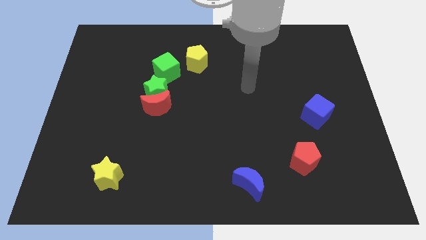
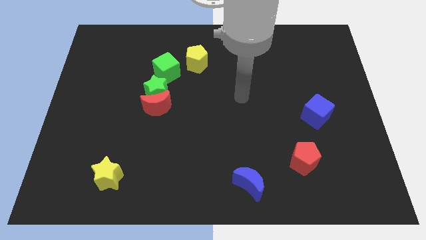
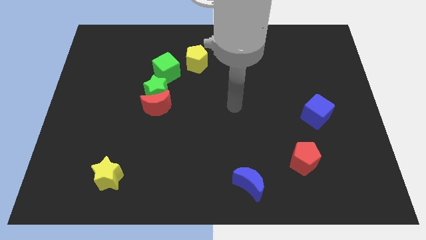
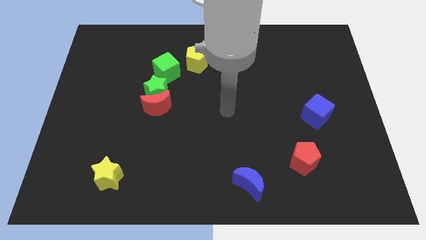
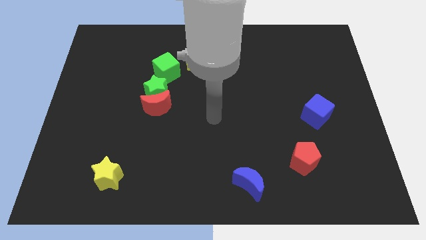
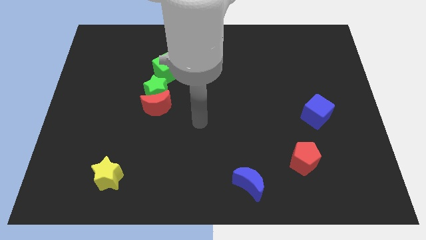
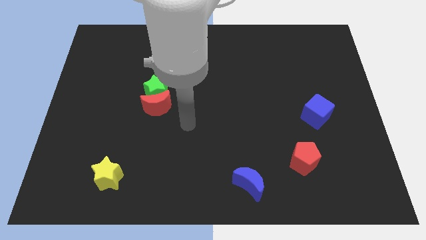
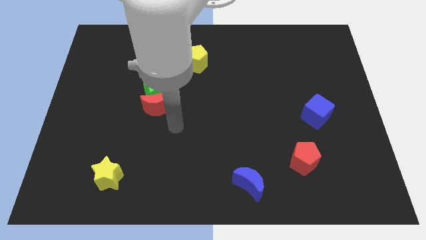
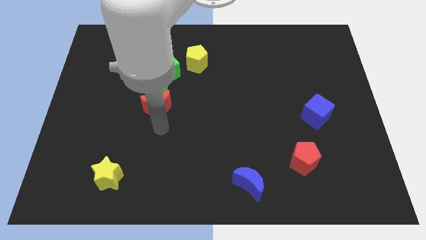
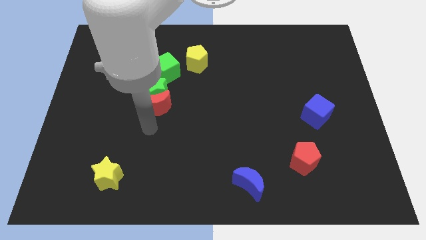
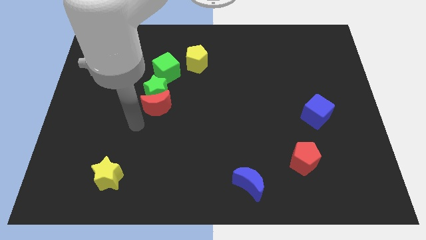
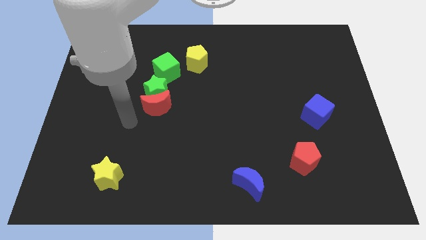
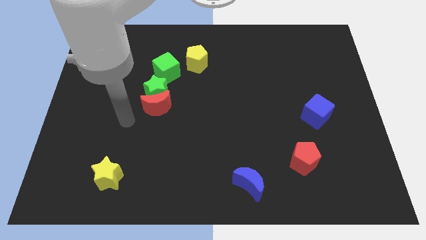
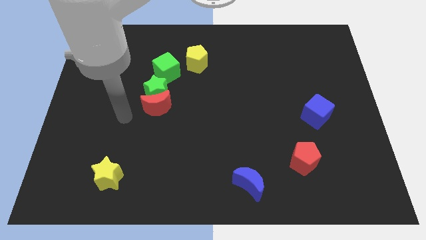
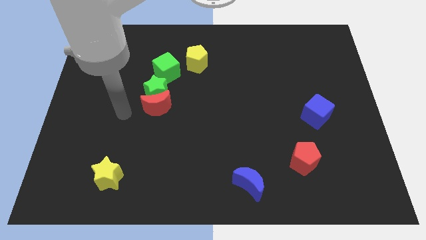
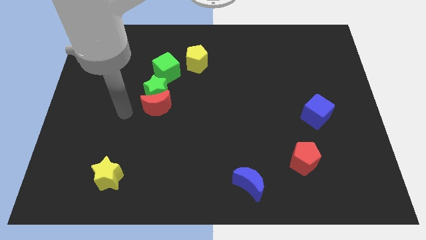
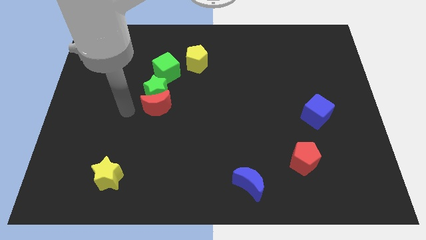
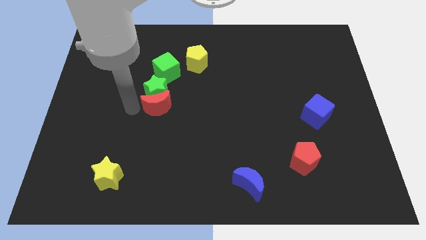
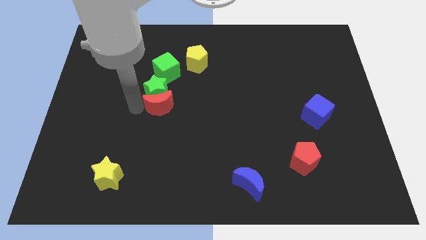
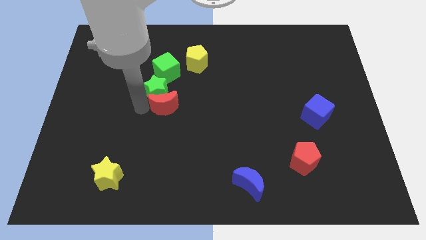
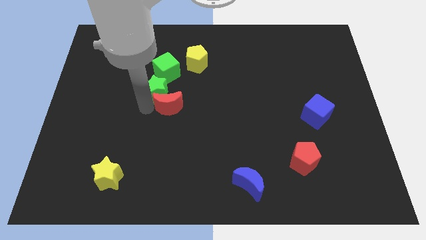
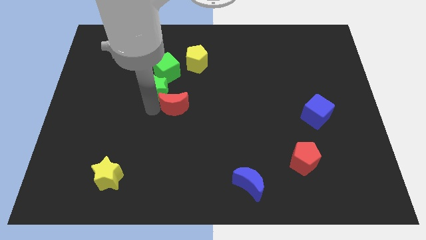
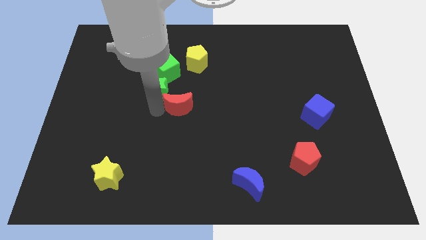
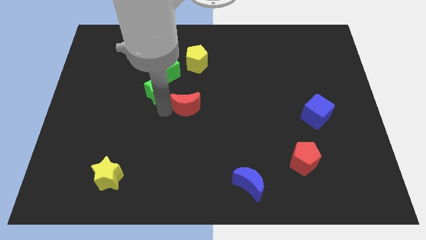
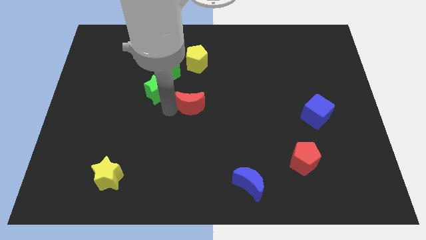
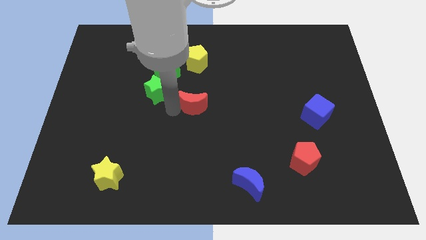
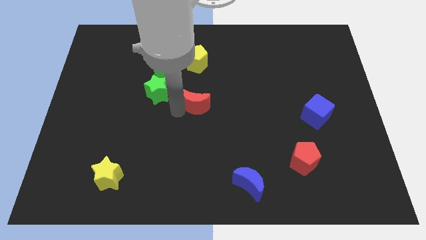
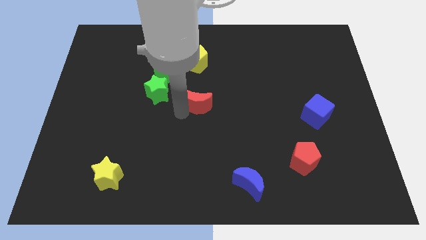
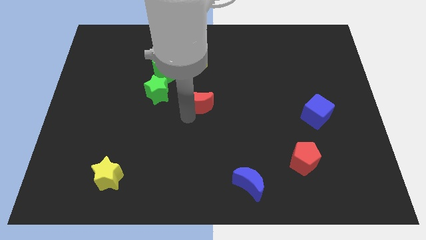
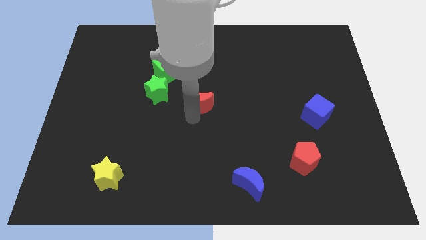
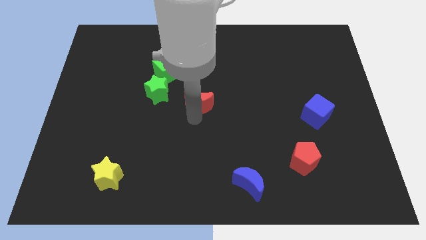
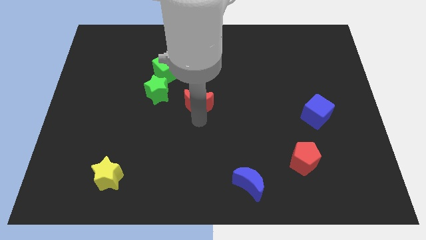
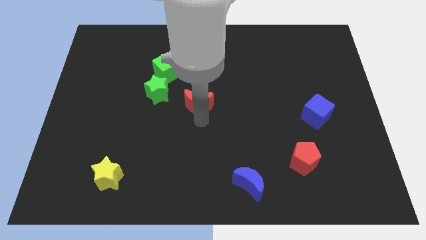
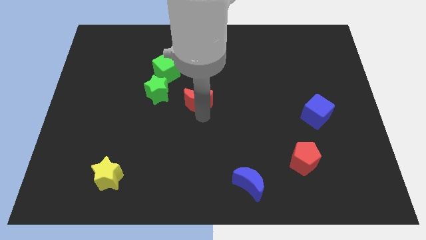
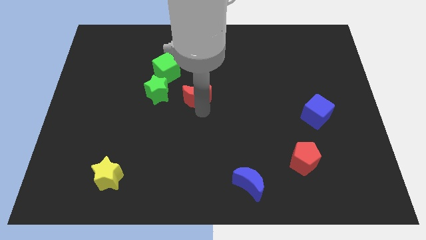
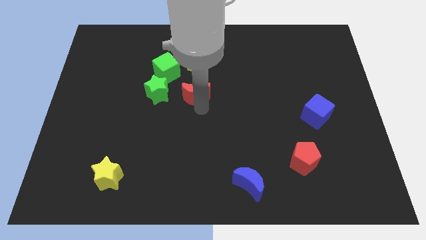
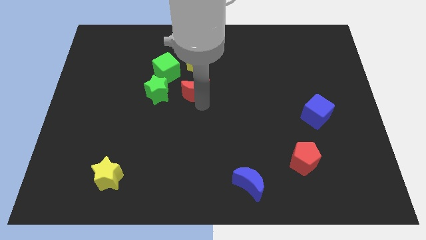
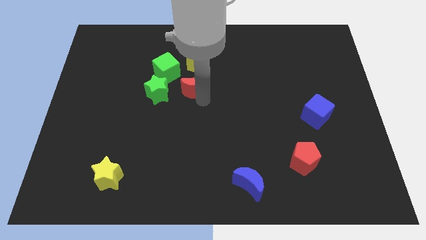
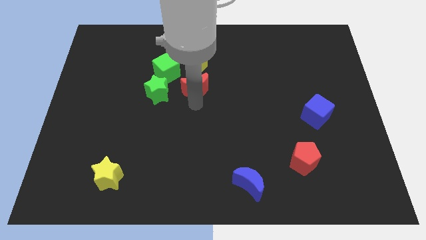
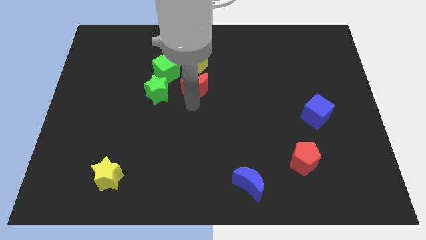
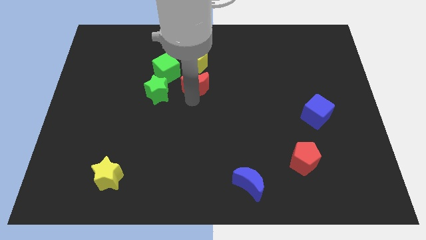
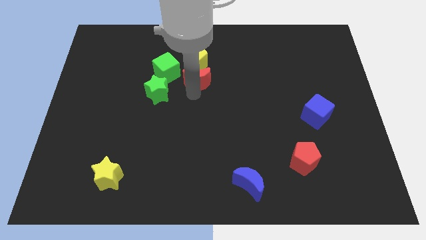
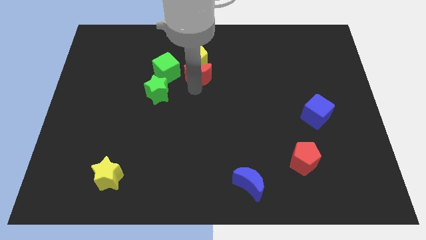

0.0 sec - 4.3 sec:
place the red crescent right to the green cube

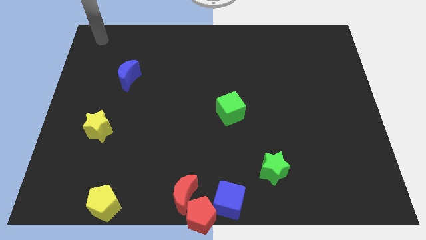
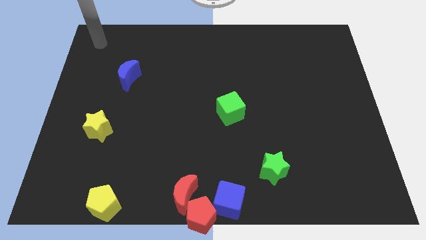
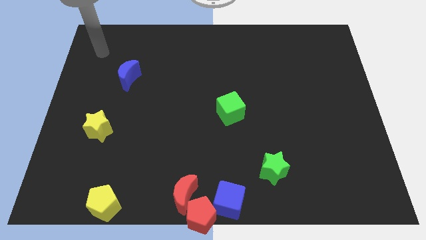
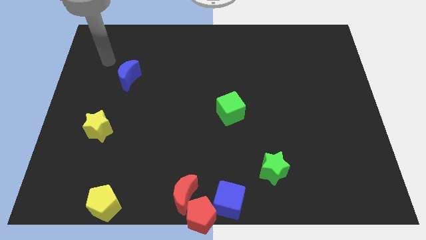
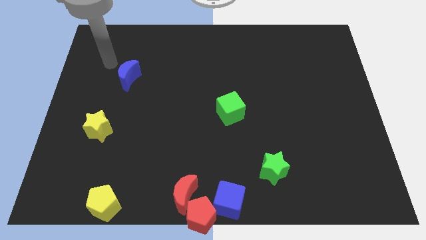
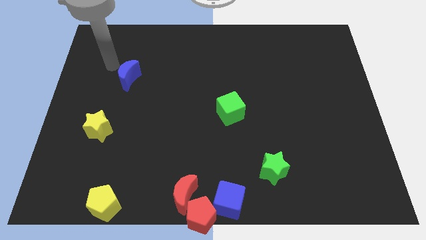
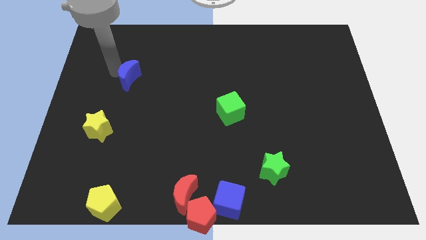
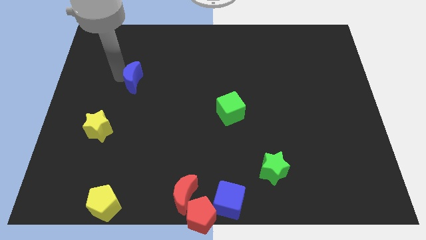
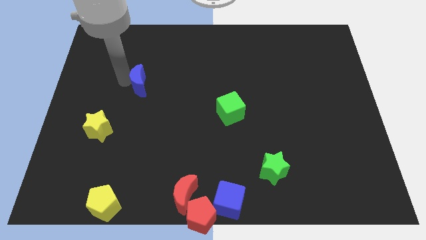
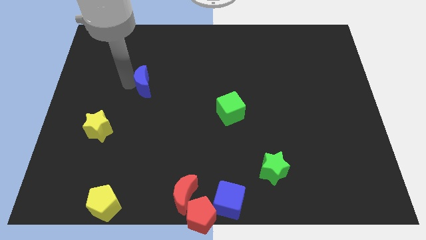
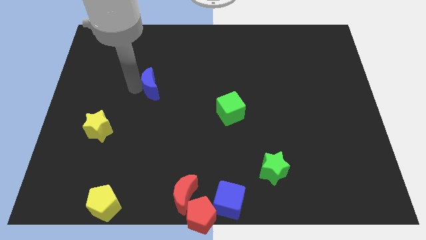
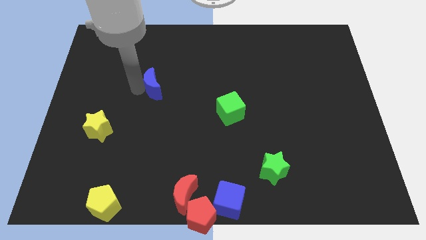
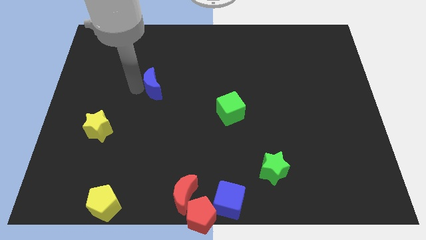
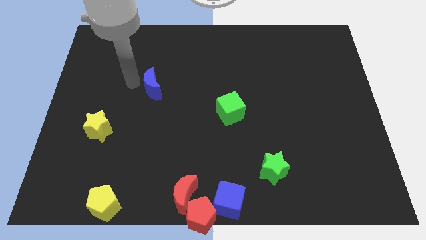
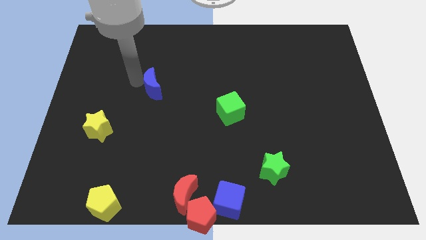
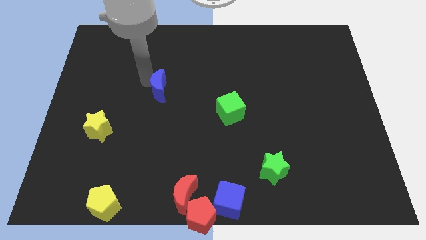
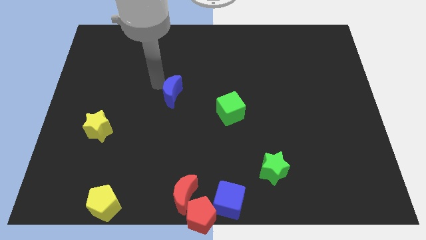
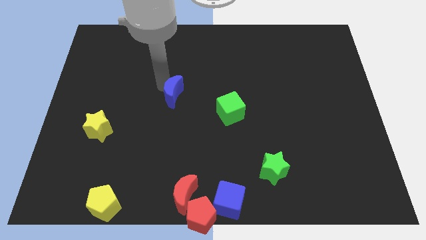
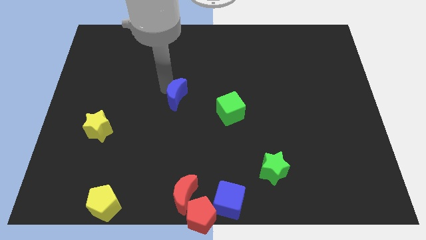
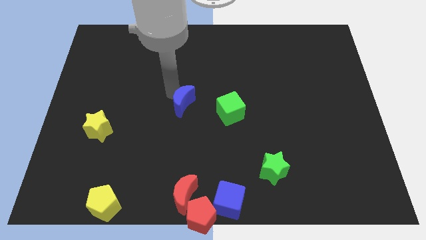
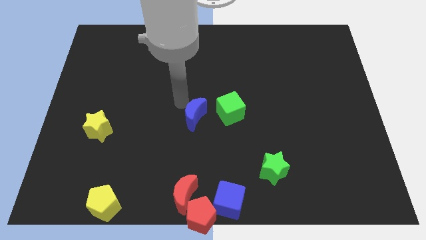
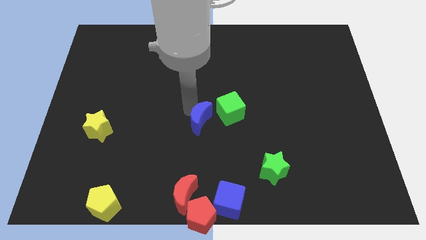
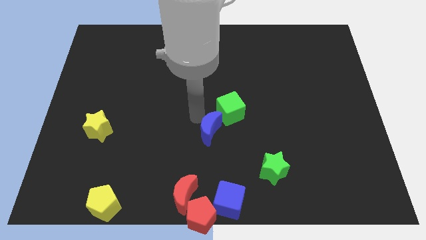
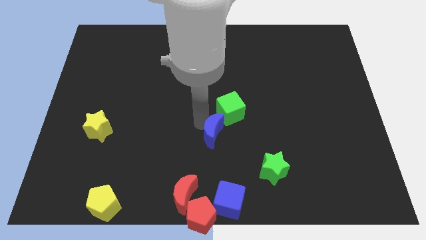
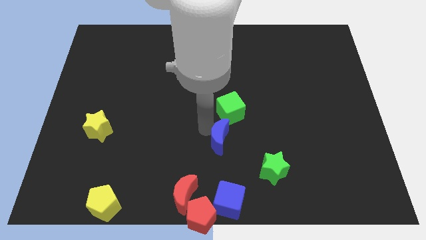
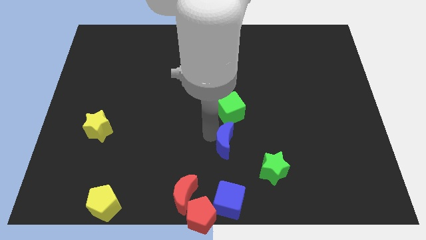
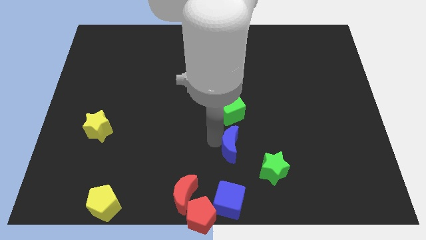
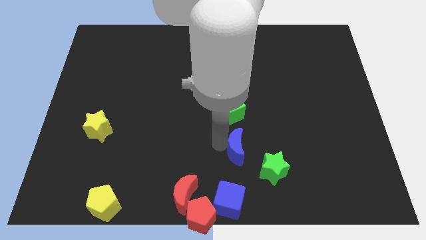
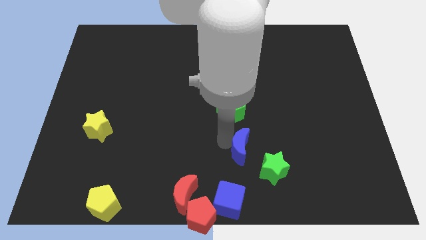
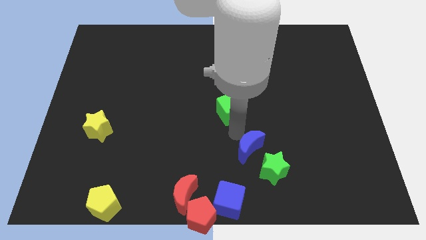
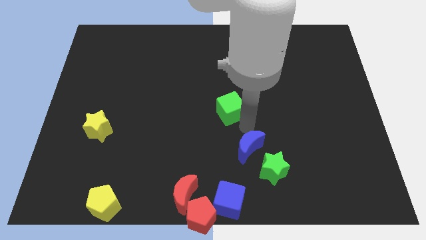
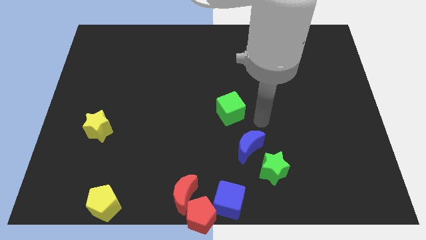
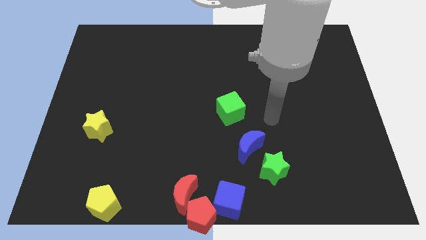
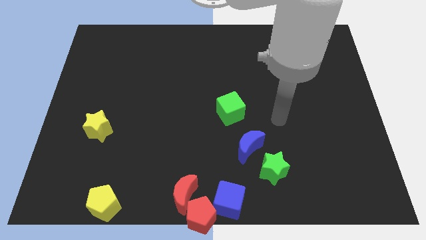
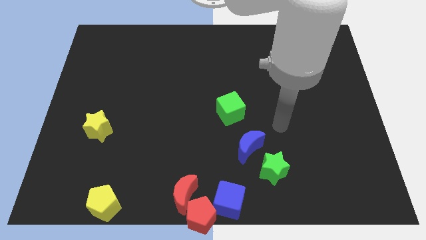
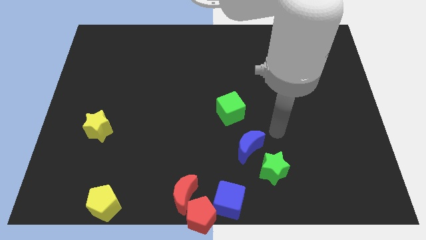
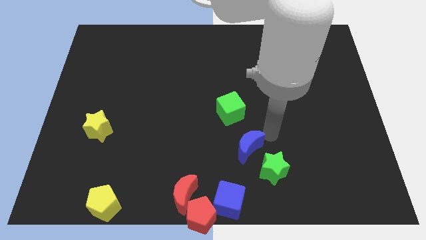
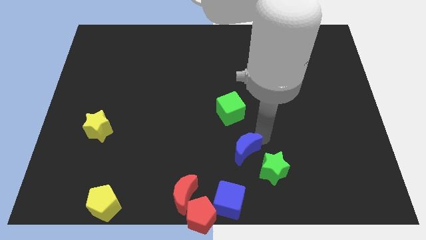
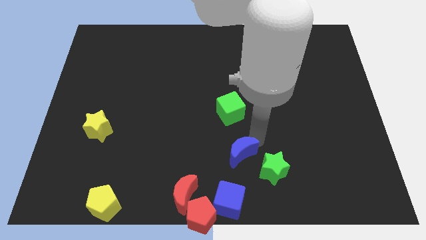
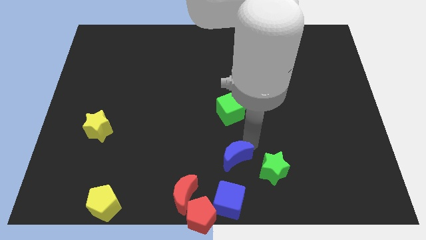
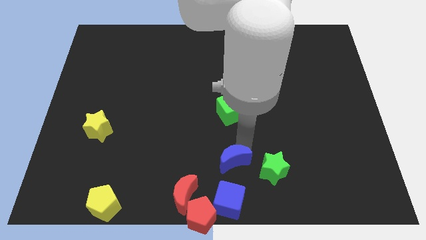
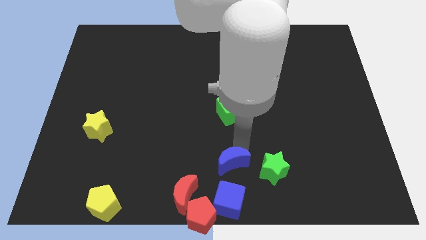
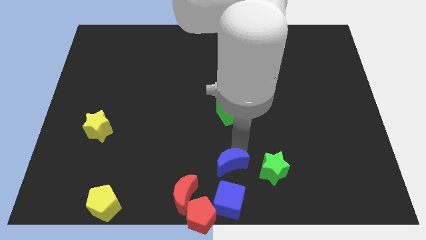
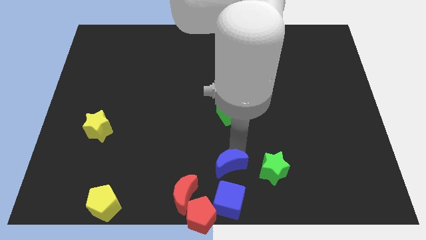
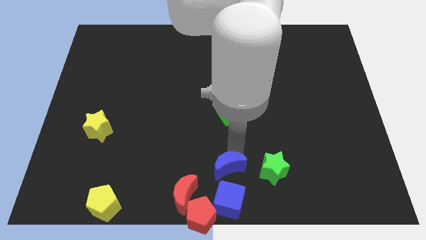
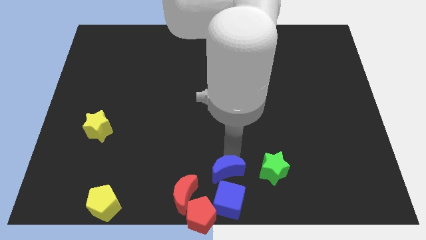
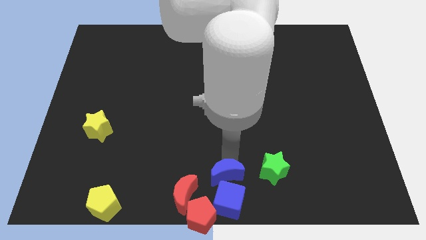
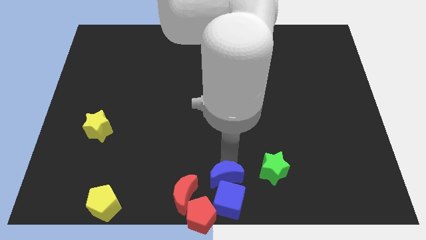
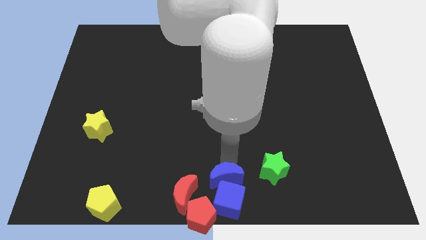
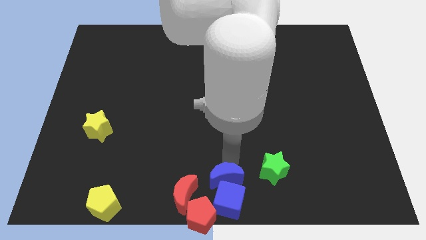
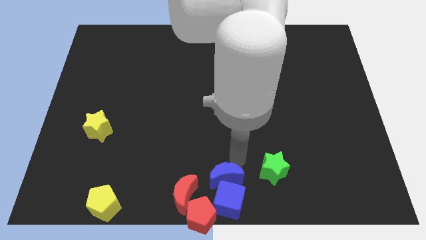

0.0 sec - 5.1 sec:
push the blue moon into the blue square
